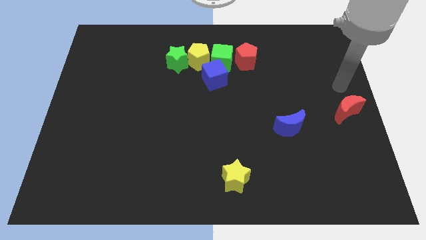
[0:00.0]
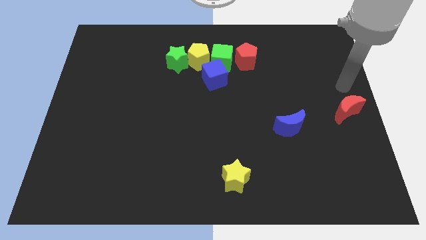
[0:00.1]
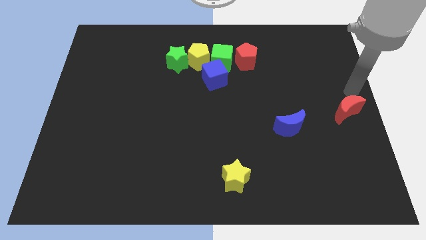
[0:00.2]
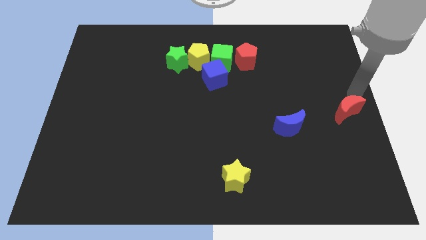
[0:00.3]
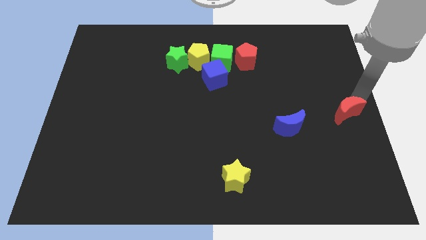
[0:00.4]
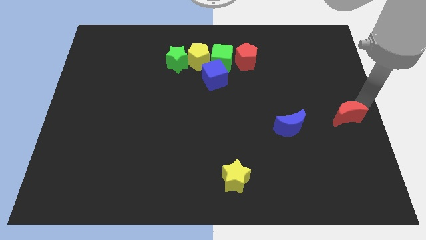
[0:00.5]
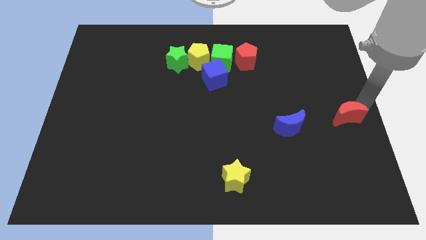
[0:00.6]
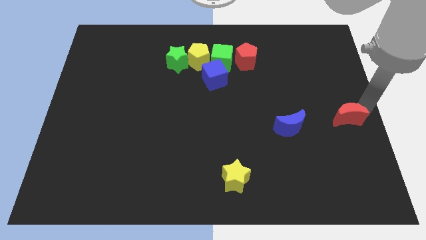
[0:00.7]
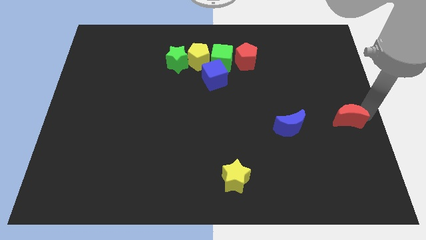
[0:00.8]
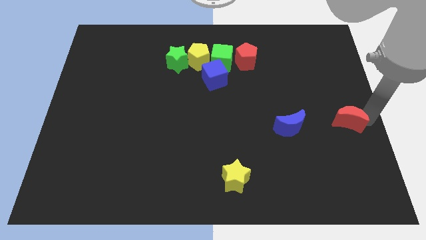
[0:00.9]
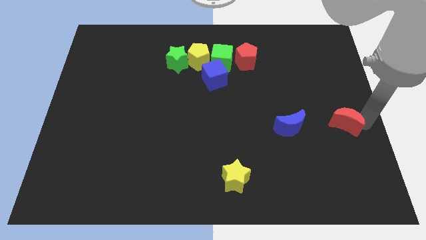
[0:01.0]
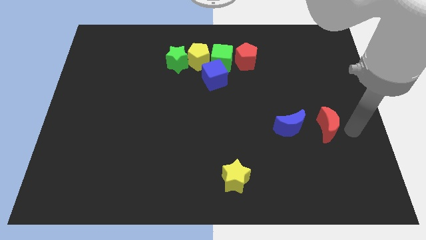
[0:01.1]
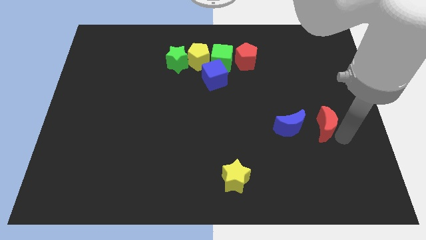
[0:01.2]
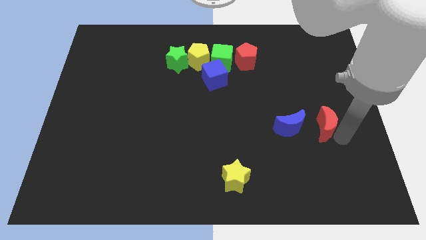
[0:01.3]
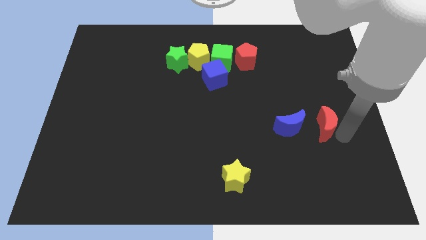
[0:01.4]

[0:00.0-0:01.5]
place red moon to the right of blue moon

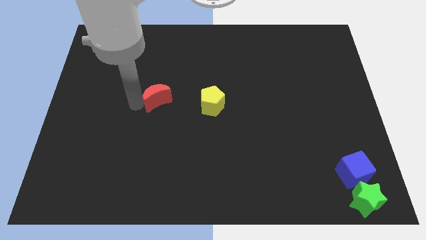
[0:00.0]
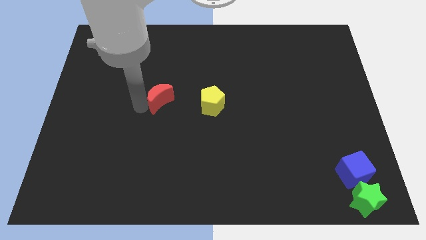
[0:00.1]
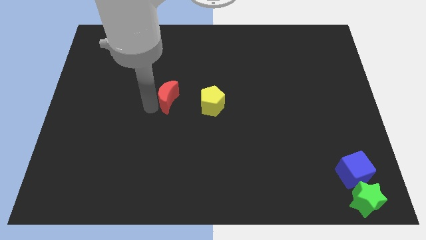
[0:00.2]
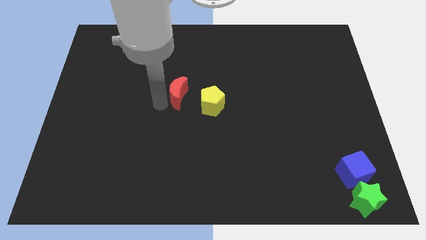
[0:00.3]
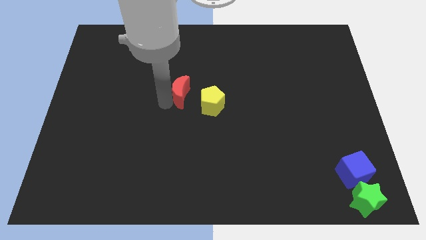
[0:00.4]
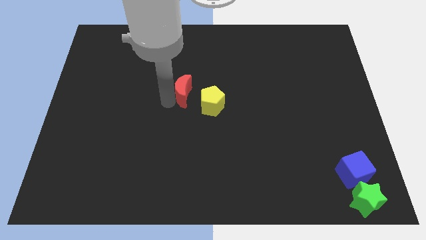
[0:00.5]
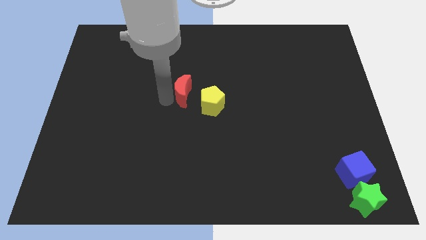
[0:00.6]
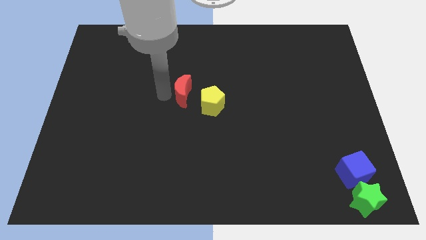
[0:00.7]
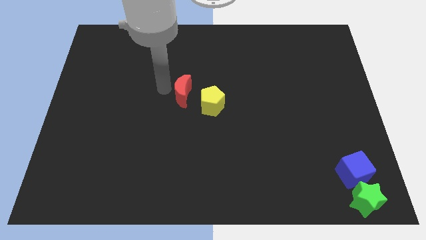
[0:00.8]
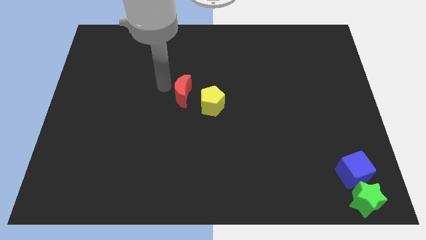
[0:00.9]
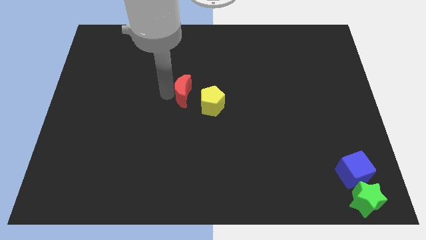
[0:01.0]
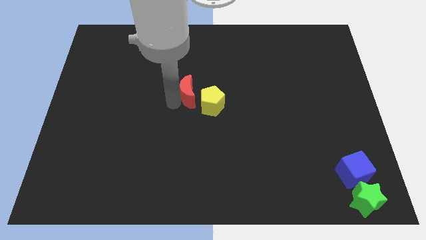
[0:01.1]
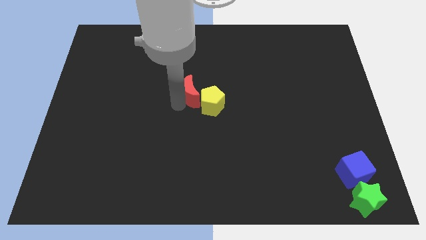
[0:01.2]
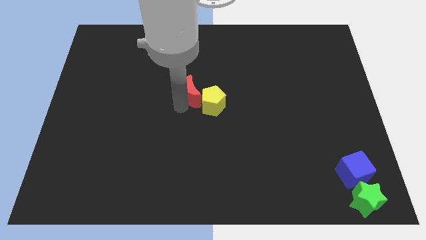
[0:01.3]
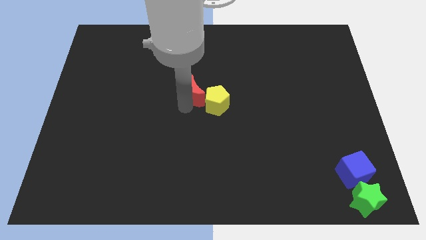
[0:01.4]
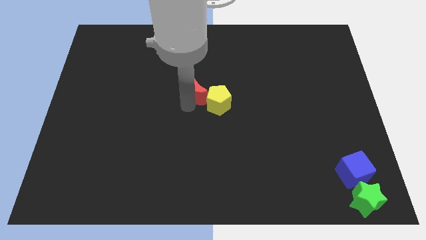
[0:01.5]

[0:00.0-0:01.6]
move the red moon into the left side of the yellow pentagon

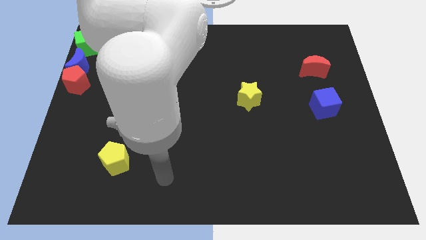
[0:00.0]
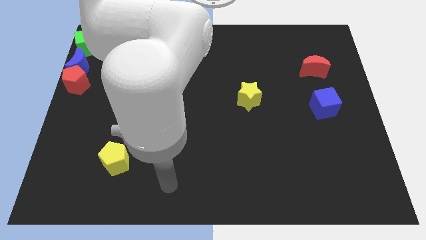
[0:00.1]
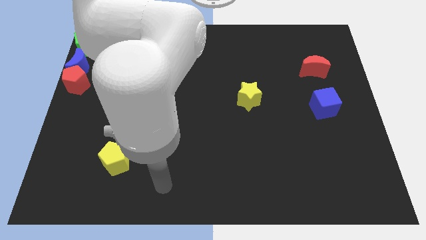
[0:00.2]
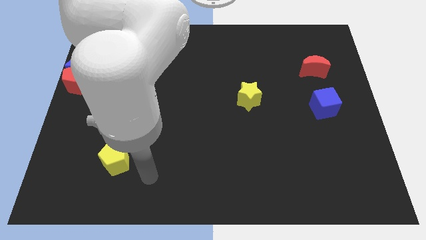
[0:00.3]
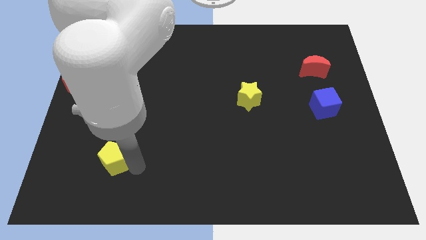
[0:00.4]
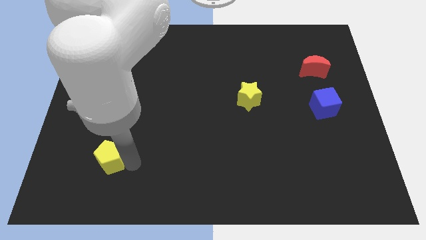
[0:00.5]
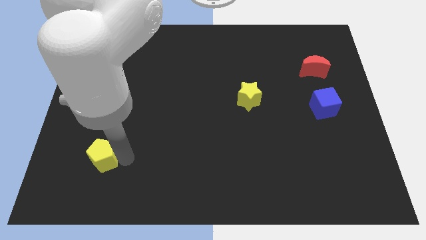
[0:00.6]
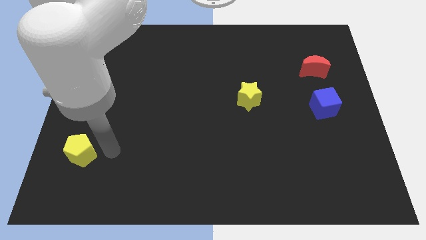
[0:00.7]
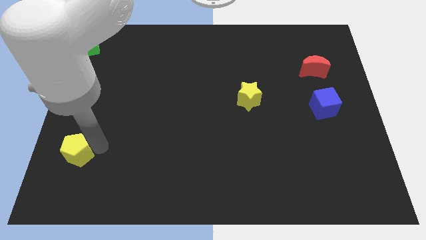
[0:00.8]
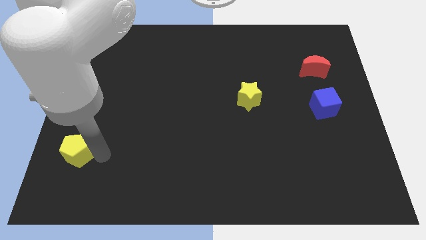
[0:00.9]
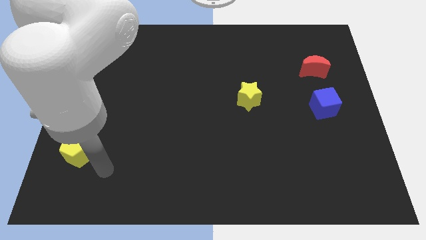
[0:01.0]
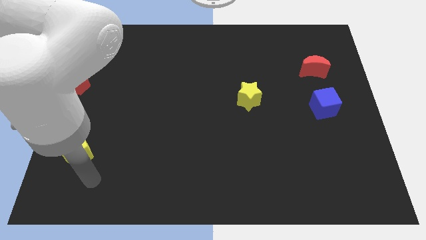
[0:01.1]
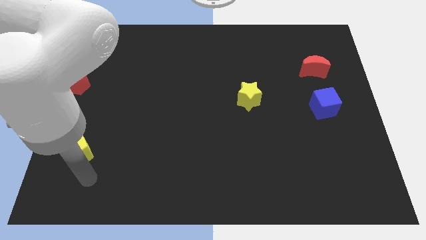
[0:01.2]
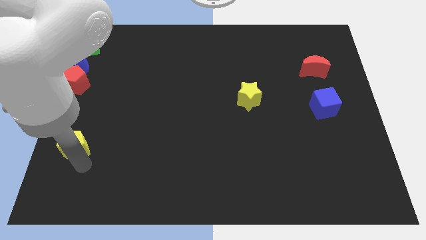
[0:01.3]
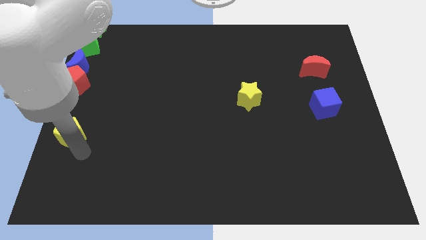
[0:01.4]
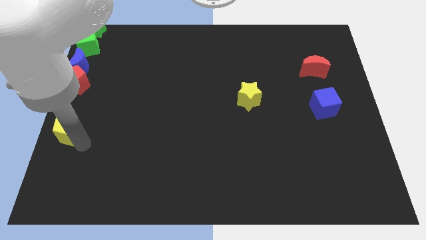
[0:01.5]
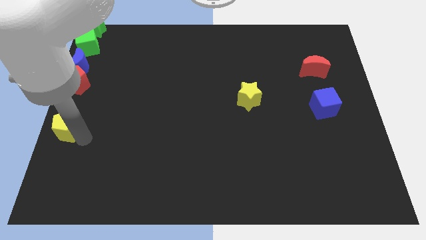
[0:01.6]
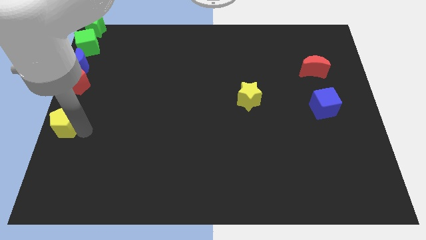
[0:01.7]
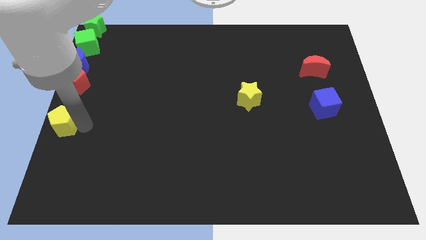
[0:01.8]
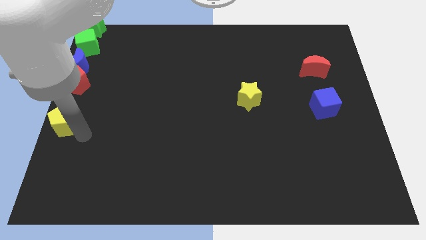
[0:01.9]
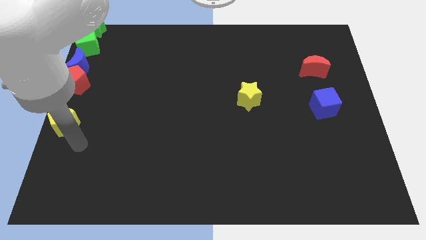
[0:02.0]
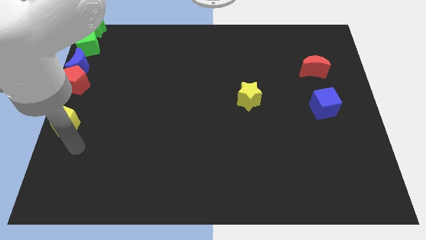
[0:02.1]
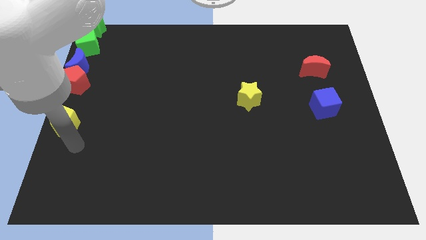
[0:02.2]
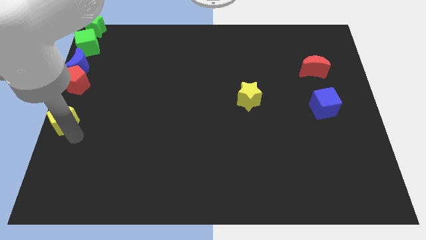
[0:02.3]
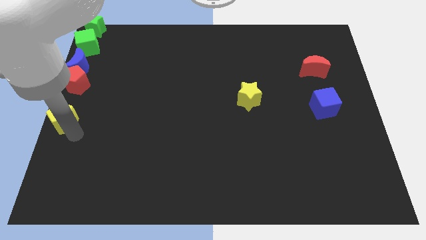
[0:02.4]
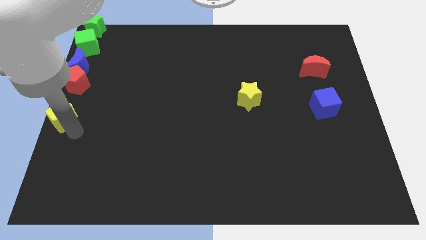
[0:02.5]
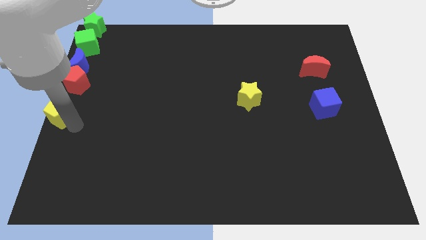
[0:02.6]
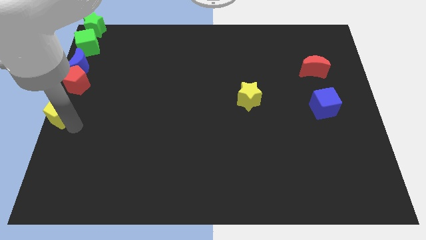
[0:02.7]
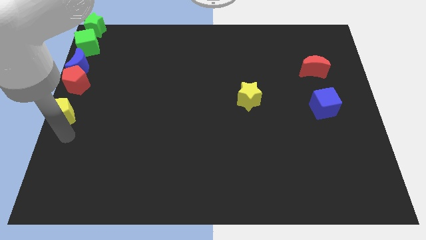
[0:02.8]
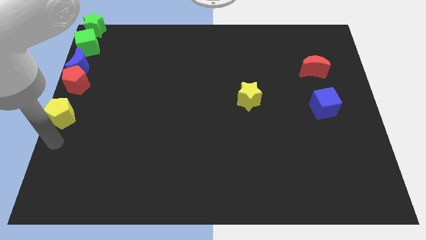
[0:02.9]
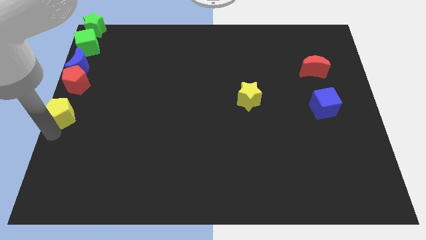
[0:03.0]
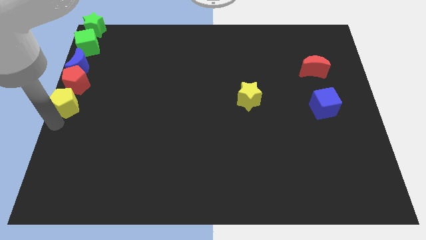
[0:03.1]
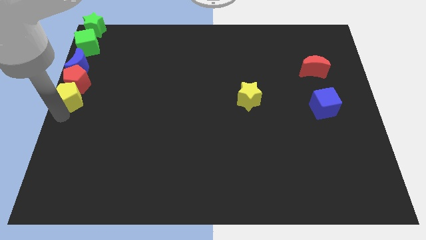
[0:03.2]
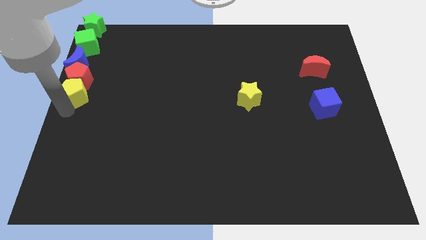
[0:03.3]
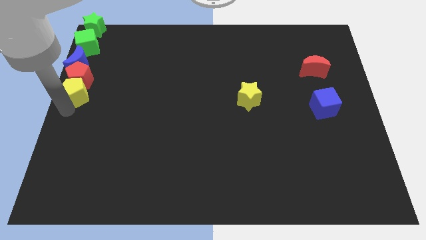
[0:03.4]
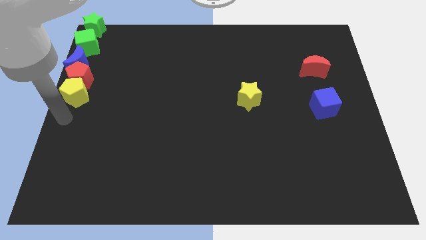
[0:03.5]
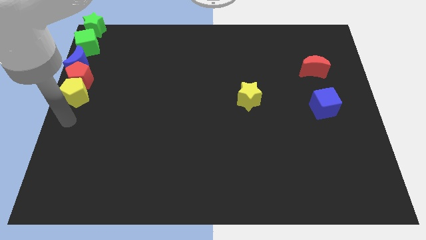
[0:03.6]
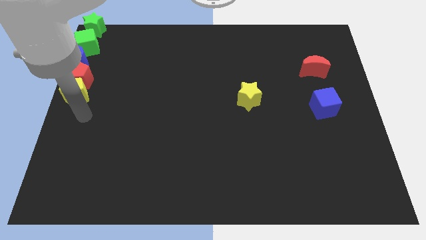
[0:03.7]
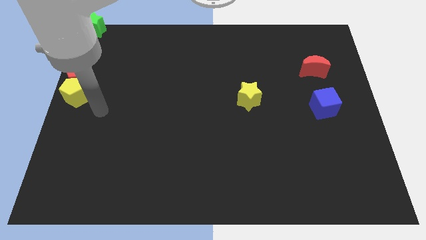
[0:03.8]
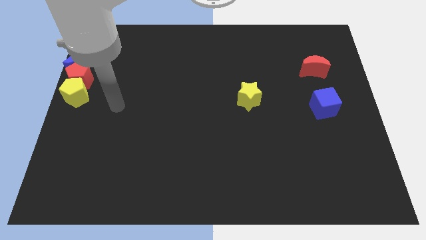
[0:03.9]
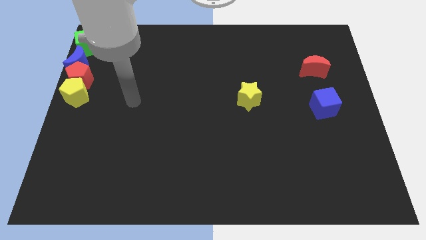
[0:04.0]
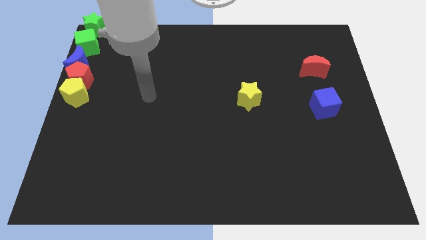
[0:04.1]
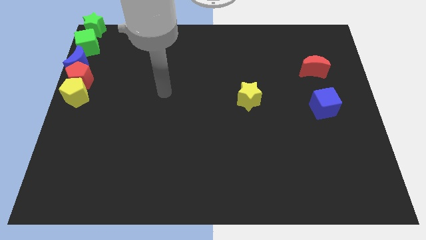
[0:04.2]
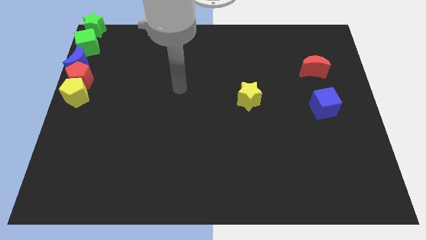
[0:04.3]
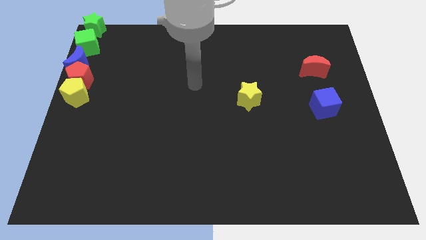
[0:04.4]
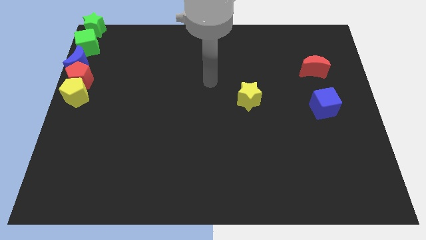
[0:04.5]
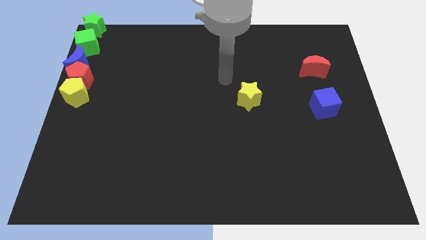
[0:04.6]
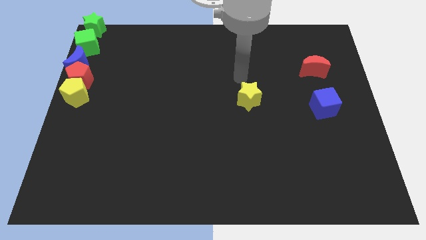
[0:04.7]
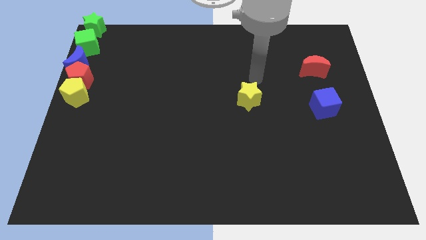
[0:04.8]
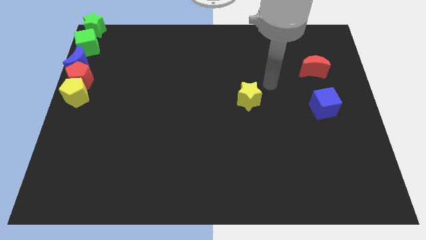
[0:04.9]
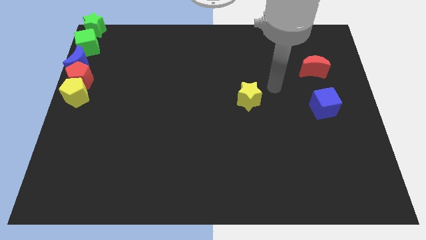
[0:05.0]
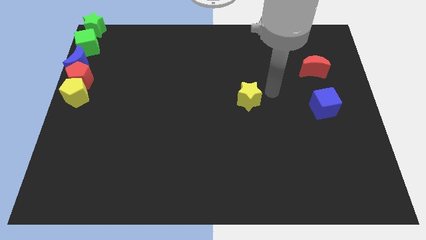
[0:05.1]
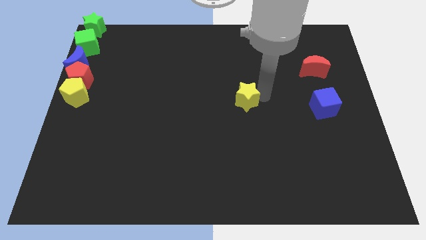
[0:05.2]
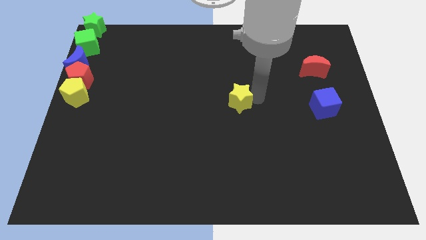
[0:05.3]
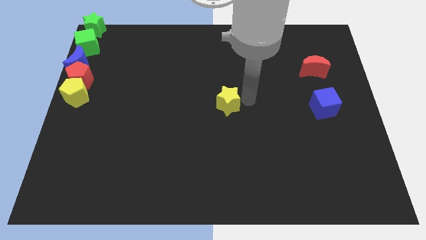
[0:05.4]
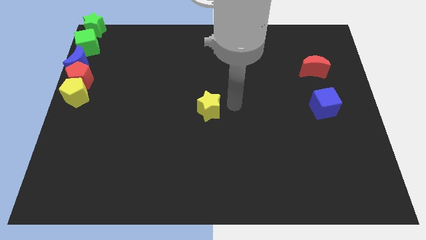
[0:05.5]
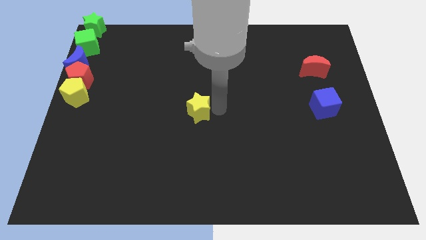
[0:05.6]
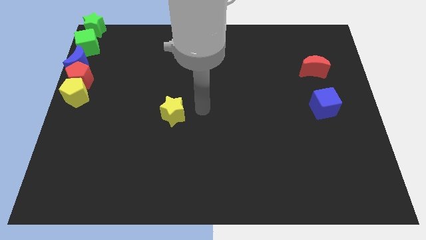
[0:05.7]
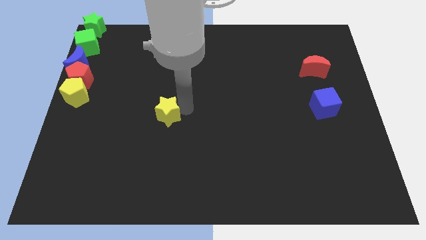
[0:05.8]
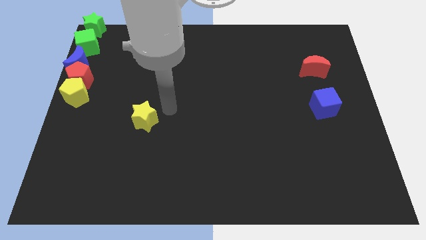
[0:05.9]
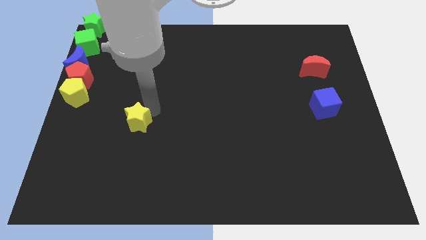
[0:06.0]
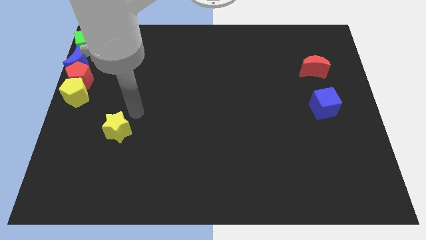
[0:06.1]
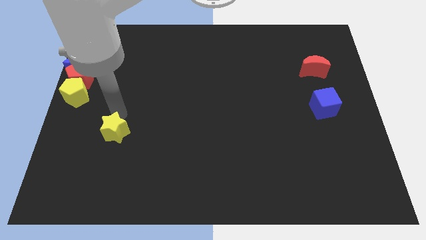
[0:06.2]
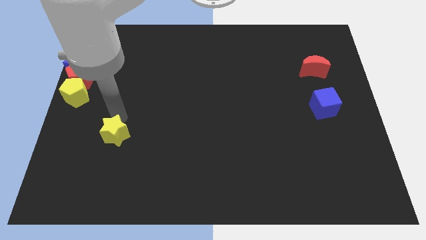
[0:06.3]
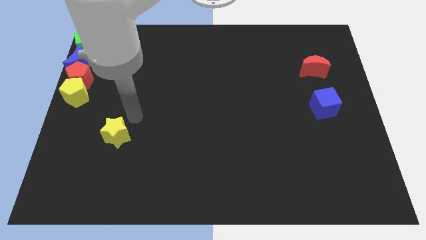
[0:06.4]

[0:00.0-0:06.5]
place the yellow star diagonal to the yellow pentagon
